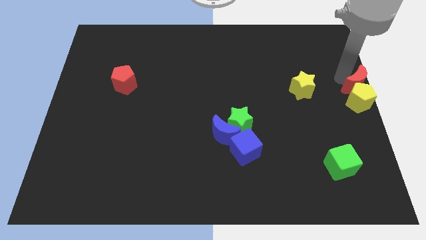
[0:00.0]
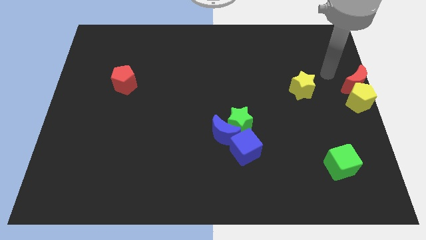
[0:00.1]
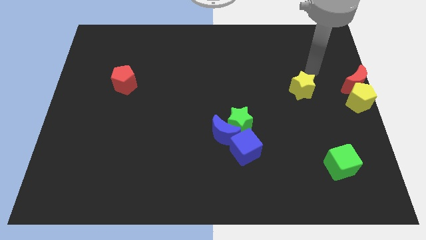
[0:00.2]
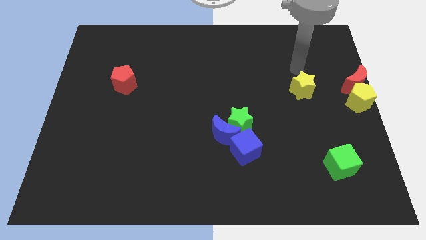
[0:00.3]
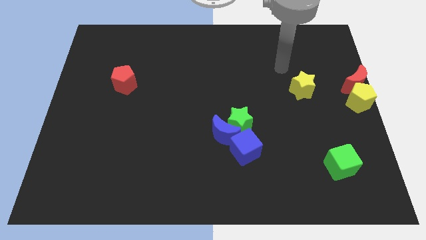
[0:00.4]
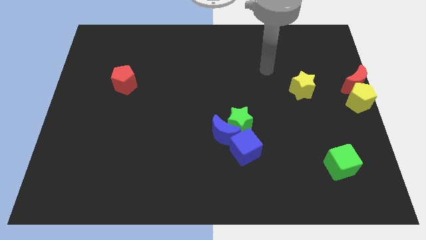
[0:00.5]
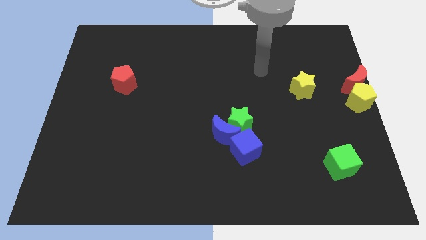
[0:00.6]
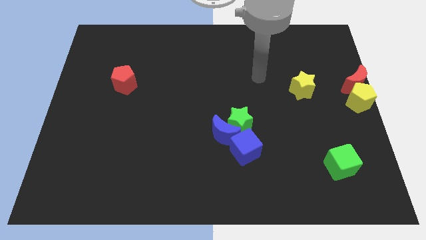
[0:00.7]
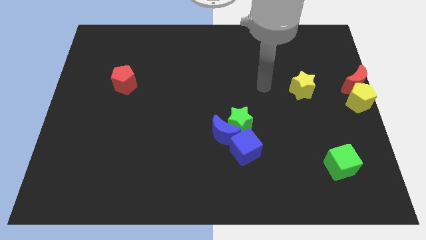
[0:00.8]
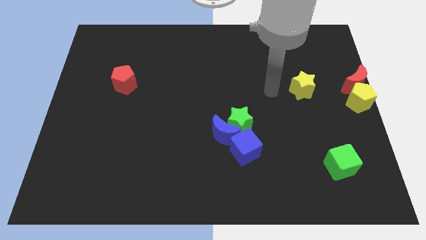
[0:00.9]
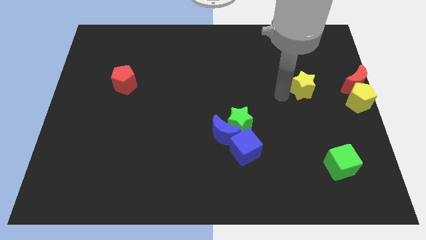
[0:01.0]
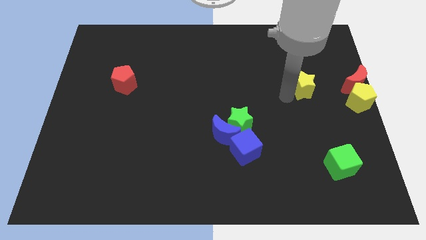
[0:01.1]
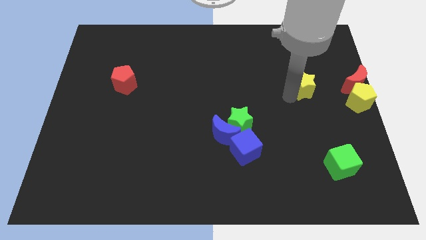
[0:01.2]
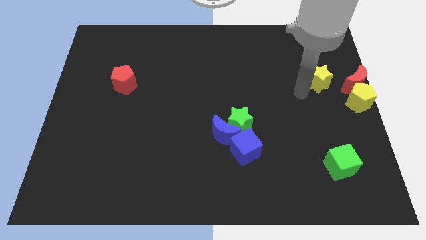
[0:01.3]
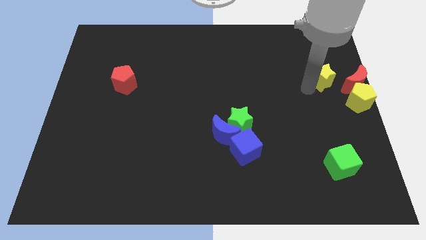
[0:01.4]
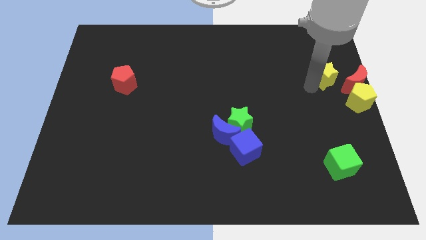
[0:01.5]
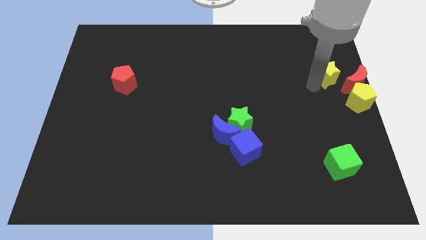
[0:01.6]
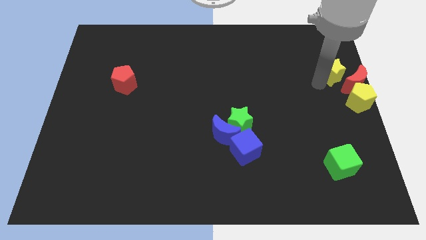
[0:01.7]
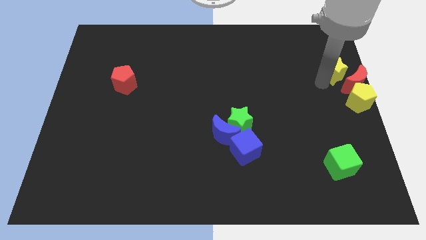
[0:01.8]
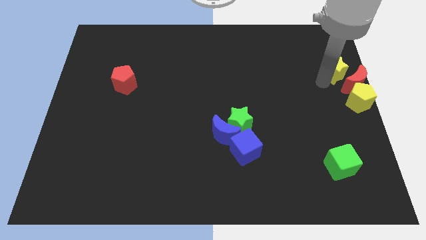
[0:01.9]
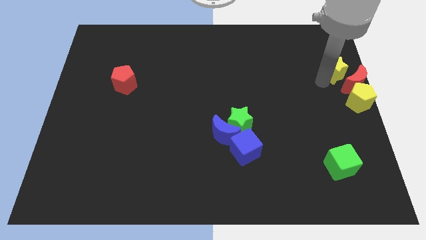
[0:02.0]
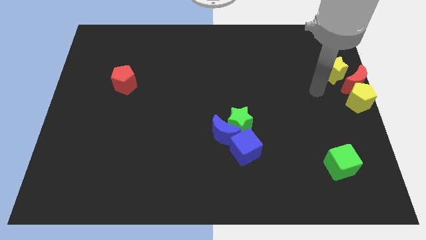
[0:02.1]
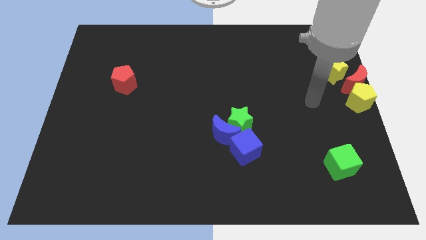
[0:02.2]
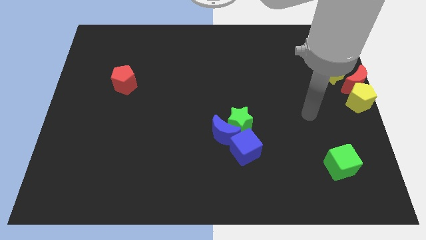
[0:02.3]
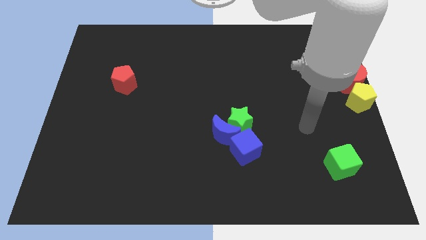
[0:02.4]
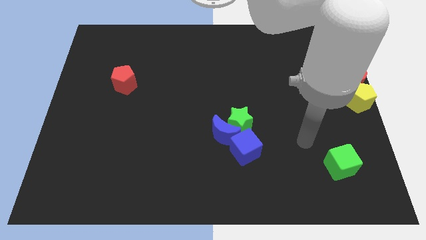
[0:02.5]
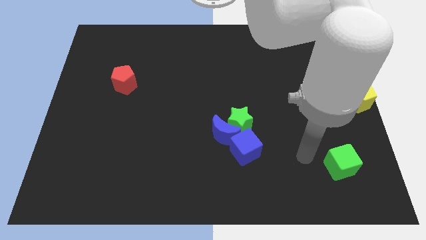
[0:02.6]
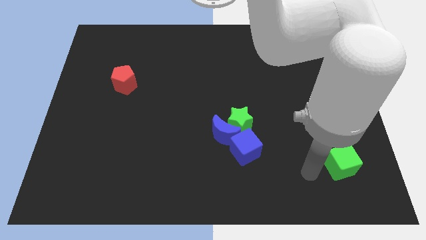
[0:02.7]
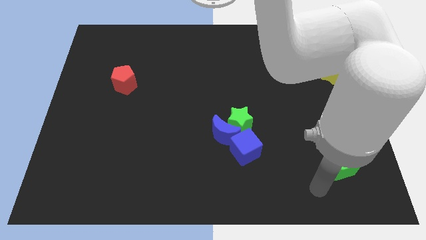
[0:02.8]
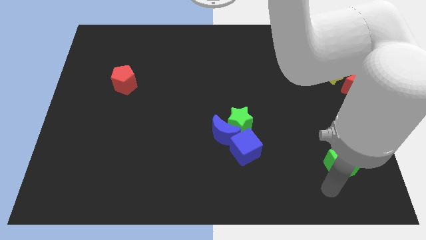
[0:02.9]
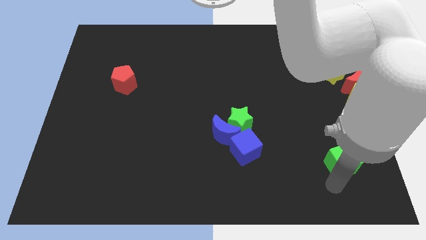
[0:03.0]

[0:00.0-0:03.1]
place yellow star to the top of red moon

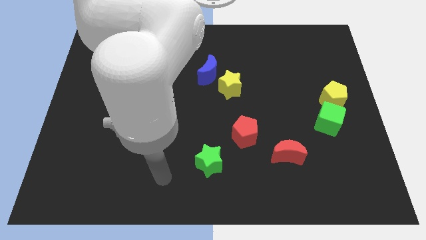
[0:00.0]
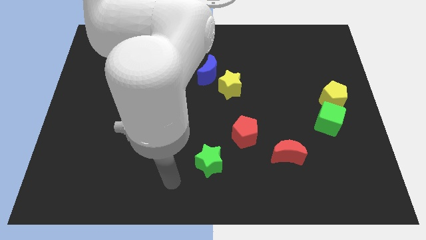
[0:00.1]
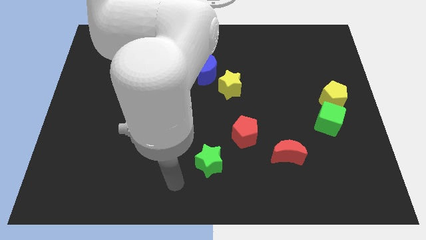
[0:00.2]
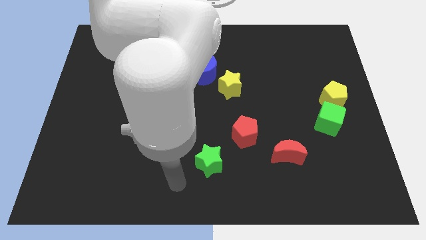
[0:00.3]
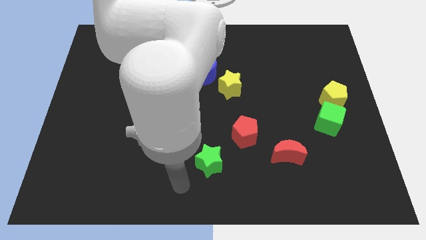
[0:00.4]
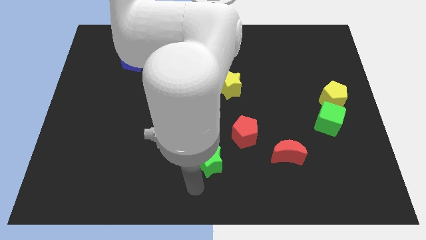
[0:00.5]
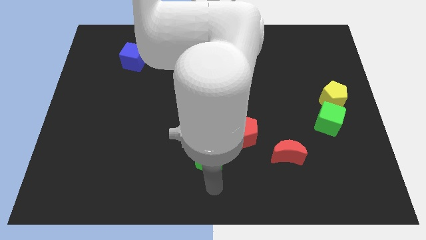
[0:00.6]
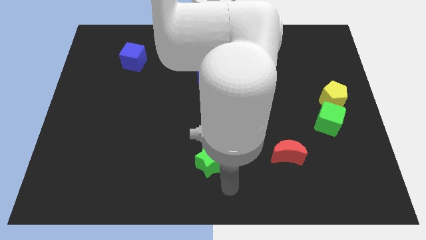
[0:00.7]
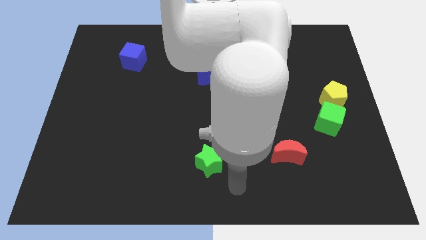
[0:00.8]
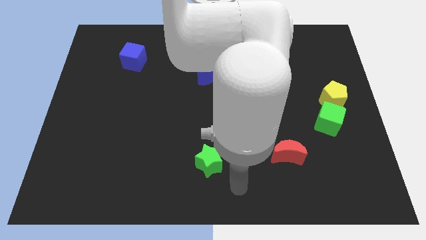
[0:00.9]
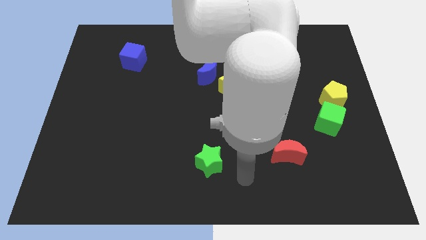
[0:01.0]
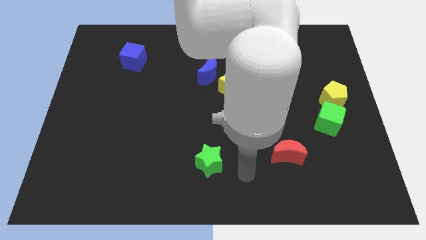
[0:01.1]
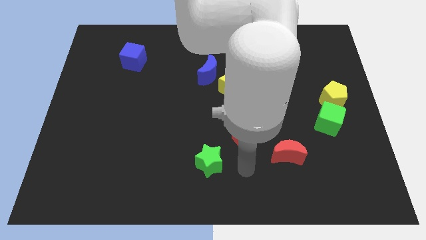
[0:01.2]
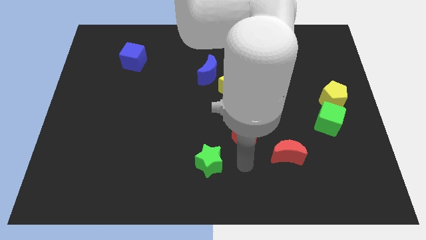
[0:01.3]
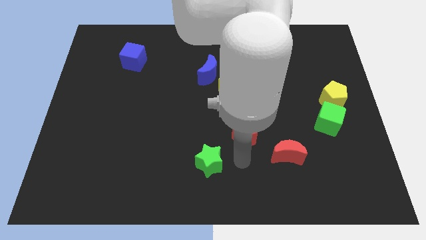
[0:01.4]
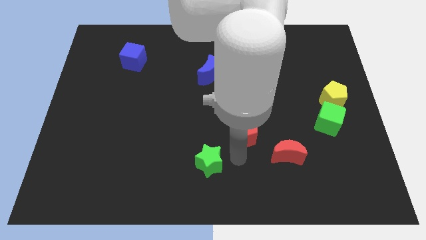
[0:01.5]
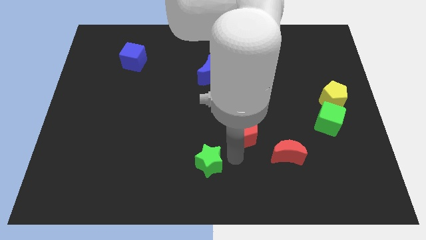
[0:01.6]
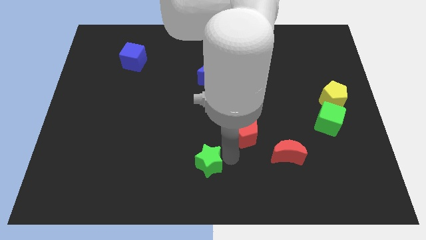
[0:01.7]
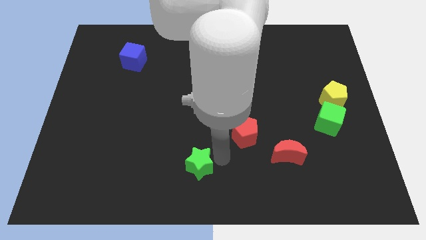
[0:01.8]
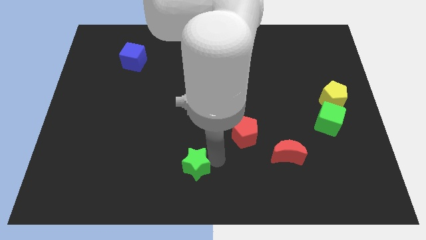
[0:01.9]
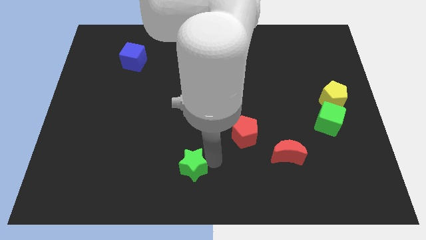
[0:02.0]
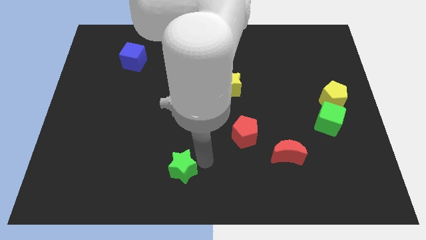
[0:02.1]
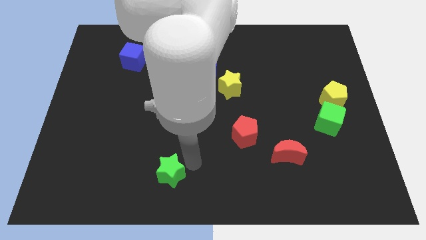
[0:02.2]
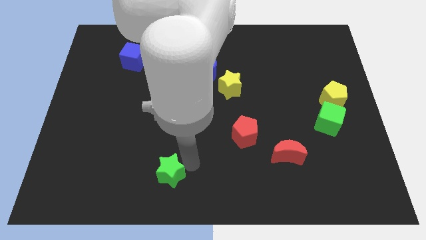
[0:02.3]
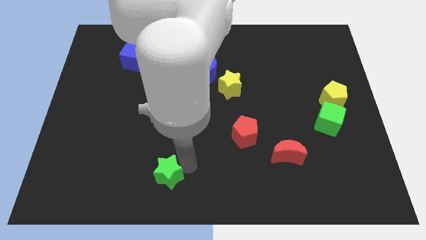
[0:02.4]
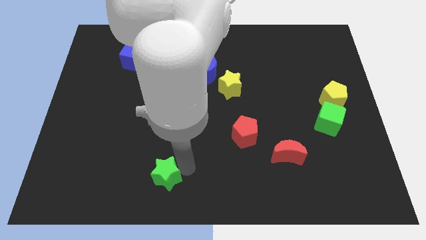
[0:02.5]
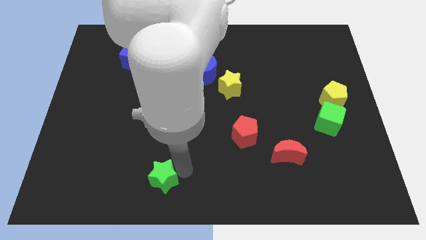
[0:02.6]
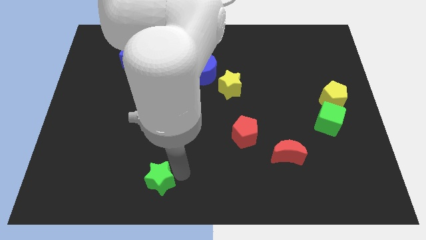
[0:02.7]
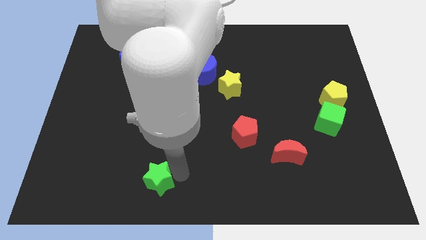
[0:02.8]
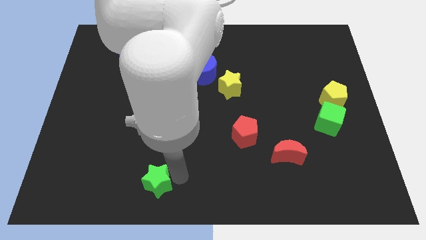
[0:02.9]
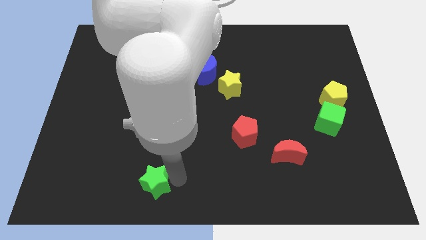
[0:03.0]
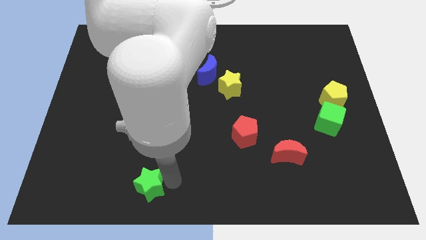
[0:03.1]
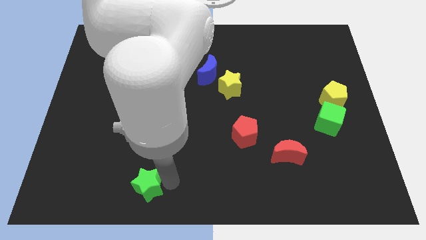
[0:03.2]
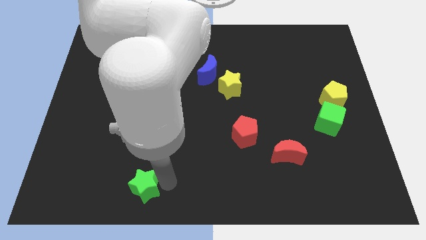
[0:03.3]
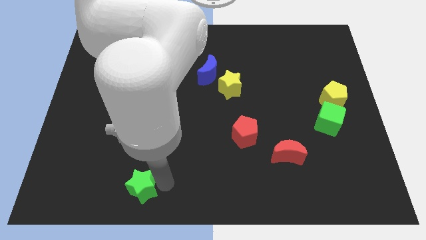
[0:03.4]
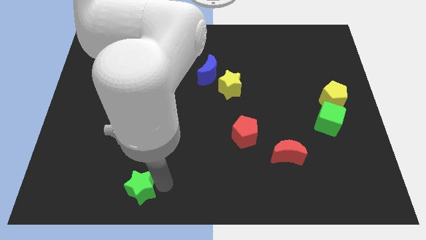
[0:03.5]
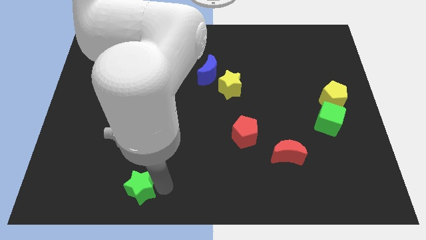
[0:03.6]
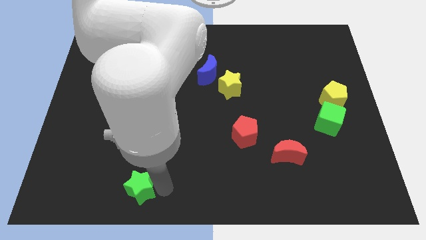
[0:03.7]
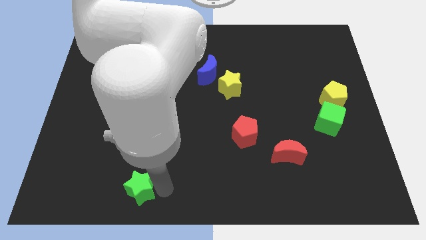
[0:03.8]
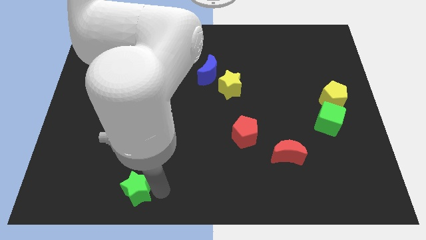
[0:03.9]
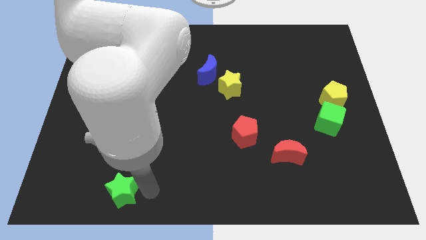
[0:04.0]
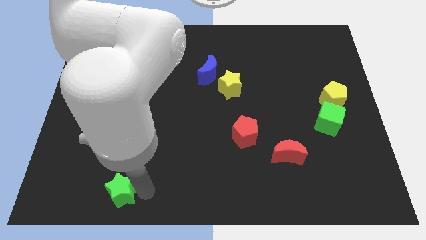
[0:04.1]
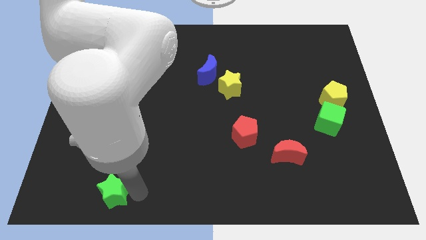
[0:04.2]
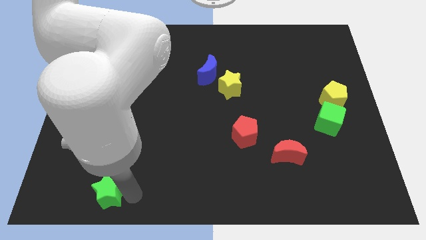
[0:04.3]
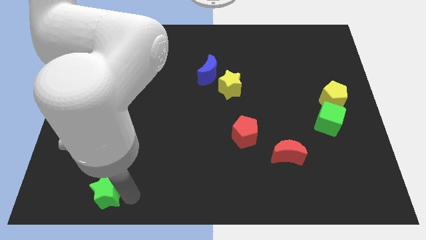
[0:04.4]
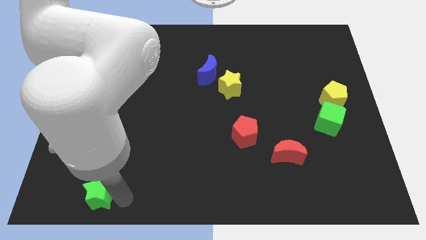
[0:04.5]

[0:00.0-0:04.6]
move the green star to the bottom left of the board

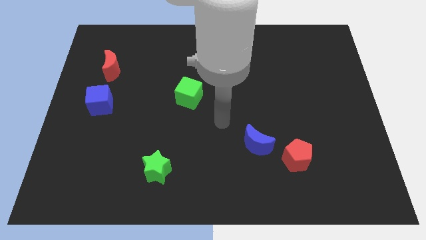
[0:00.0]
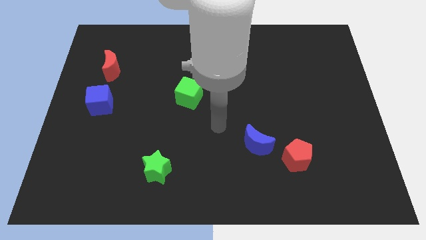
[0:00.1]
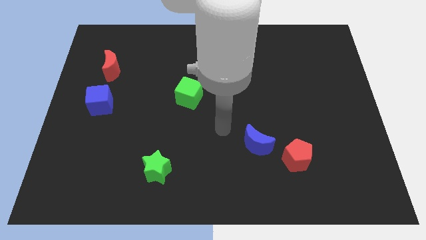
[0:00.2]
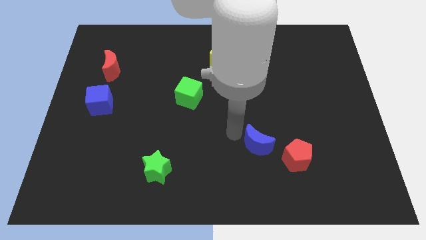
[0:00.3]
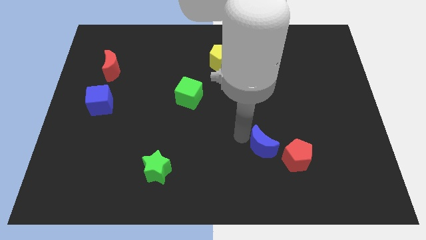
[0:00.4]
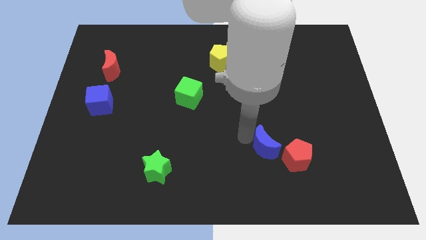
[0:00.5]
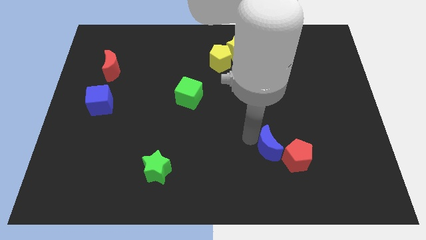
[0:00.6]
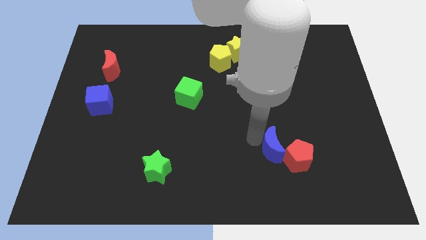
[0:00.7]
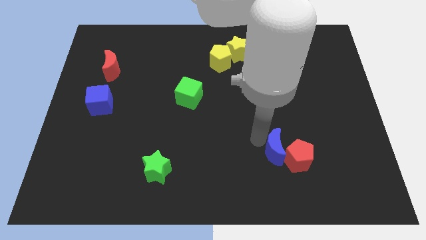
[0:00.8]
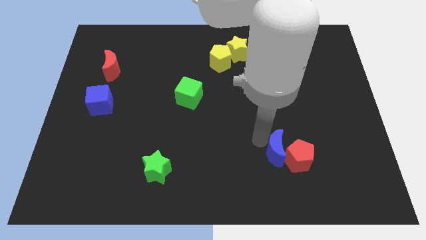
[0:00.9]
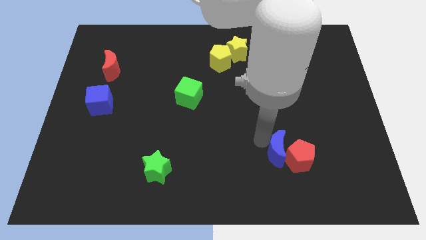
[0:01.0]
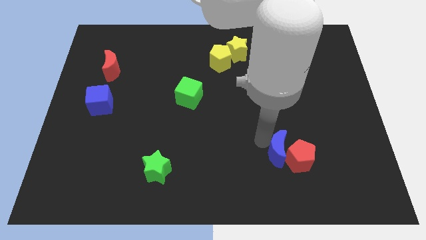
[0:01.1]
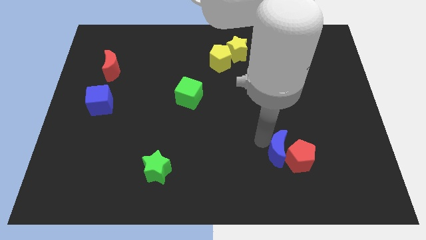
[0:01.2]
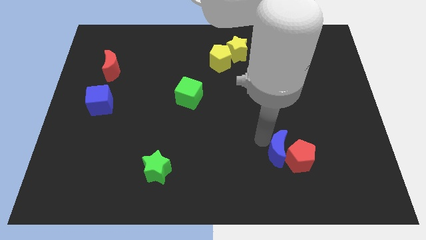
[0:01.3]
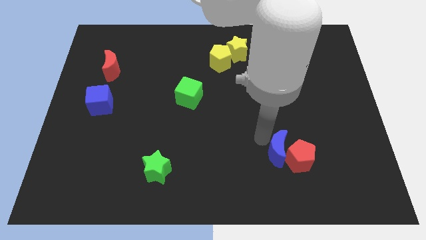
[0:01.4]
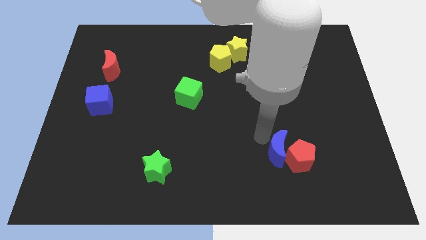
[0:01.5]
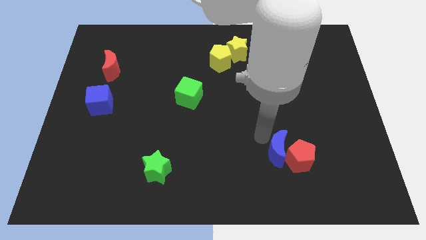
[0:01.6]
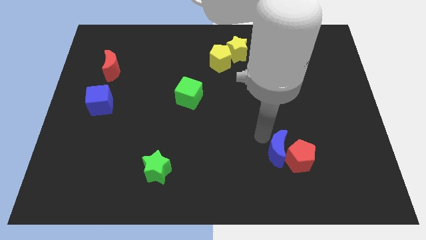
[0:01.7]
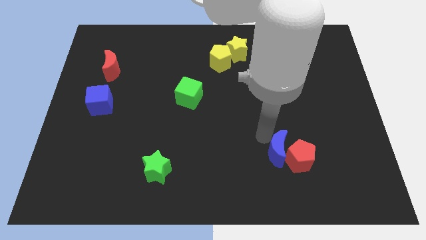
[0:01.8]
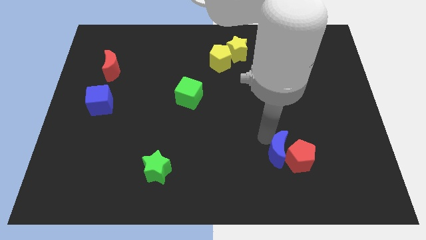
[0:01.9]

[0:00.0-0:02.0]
push blue moon into red pentagon
